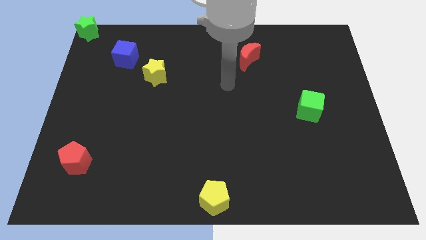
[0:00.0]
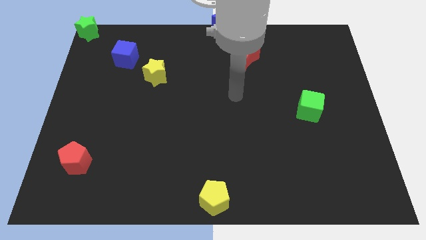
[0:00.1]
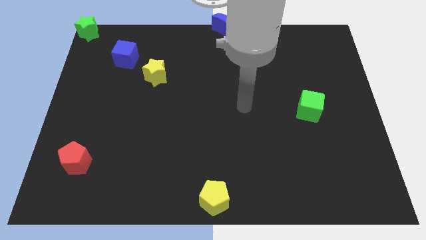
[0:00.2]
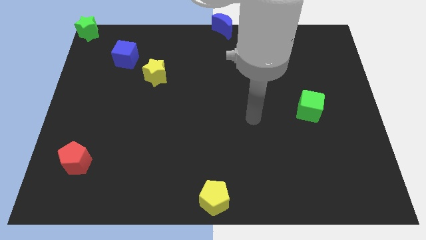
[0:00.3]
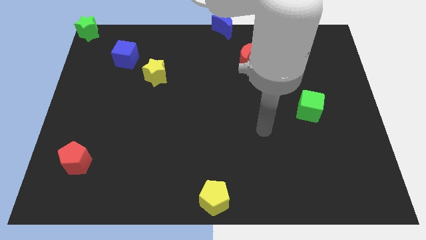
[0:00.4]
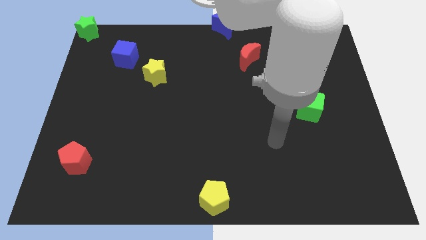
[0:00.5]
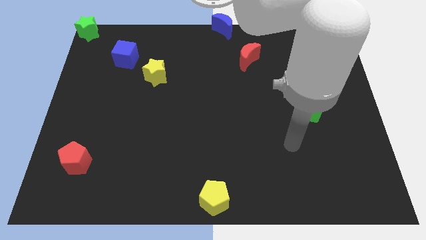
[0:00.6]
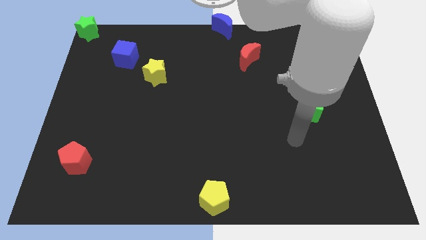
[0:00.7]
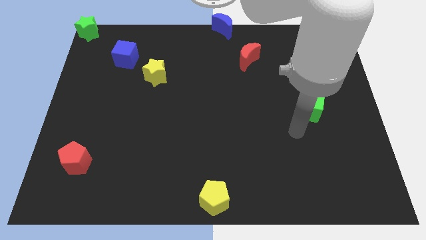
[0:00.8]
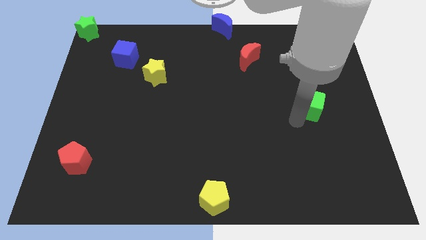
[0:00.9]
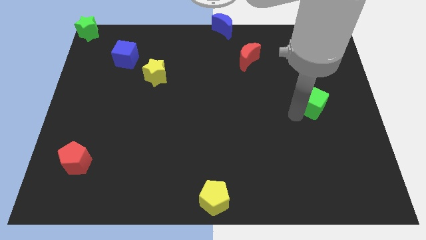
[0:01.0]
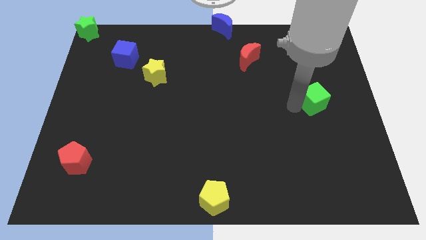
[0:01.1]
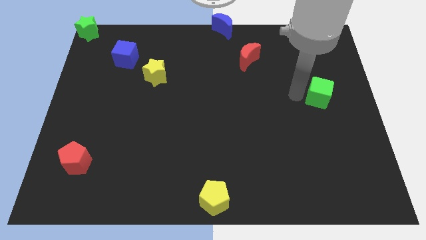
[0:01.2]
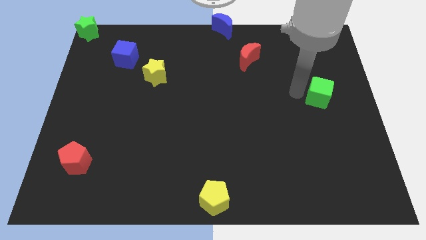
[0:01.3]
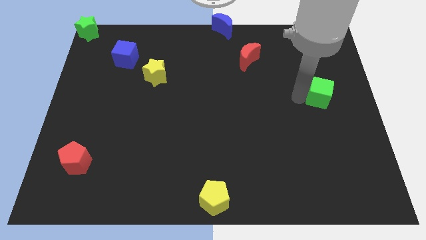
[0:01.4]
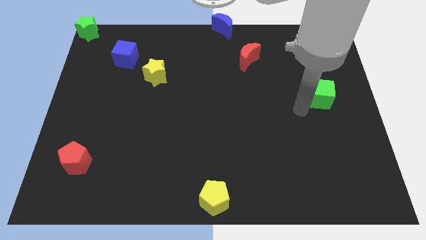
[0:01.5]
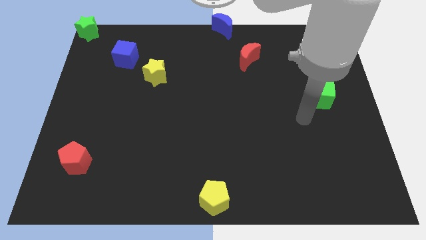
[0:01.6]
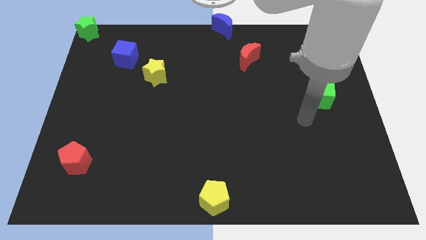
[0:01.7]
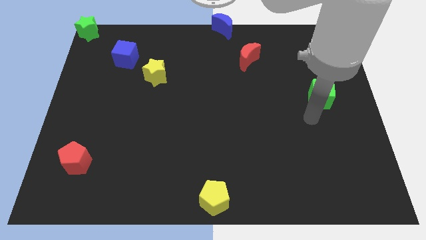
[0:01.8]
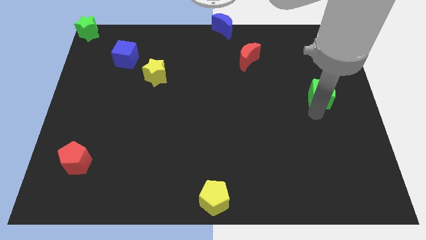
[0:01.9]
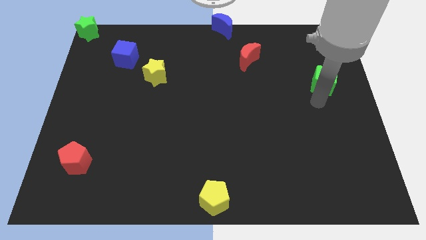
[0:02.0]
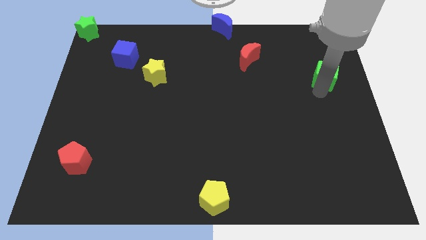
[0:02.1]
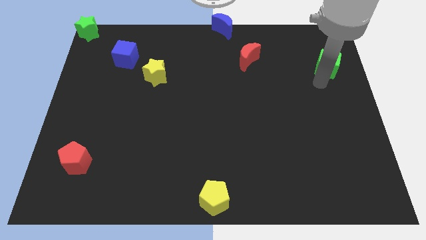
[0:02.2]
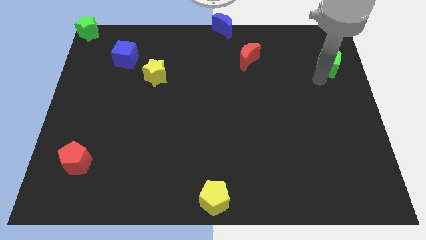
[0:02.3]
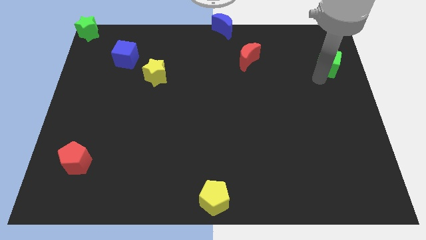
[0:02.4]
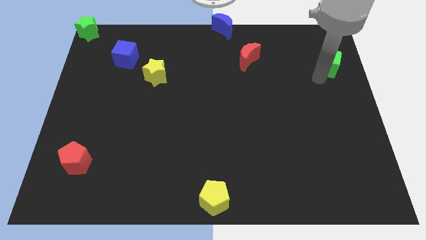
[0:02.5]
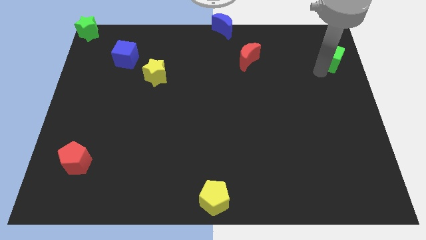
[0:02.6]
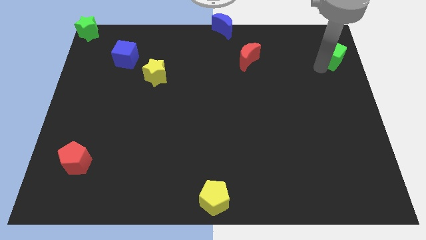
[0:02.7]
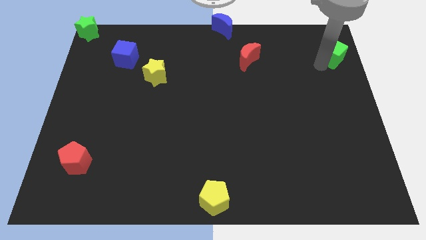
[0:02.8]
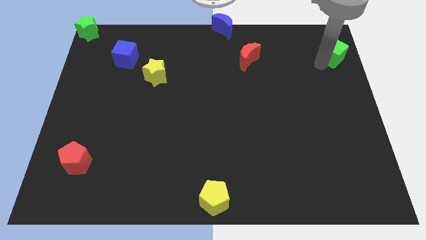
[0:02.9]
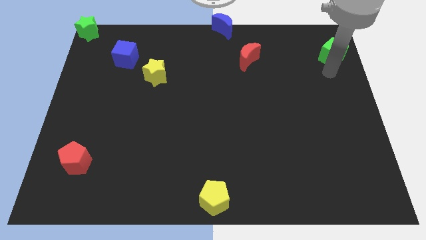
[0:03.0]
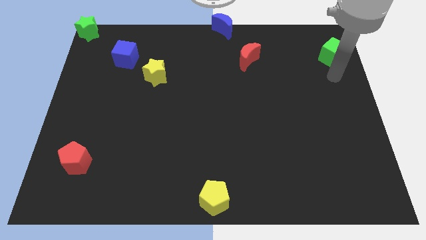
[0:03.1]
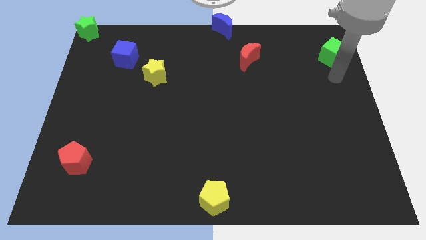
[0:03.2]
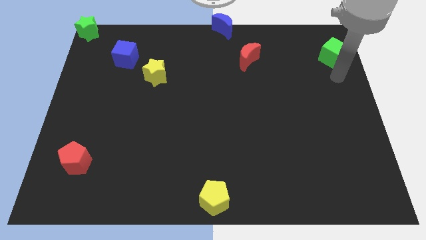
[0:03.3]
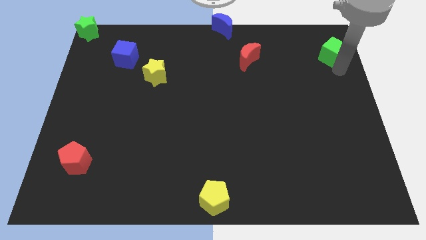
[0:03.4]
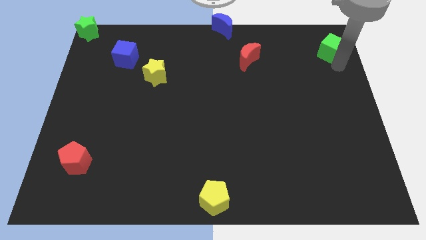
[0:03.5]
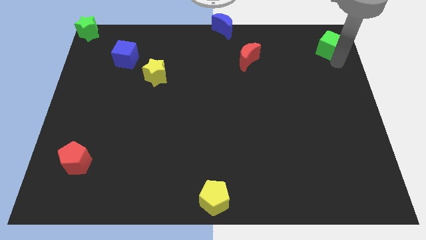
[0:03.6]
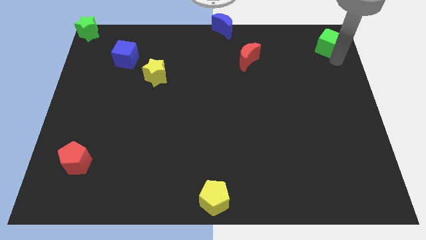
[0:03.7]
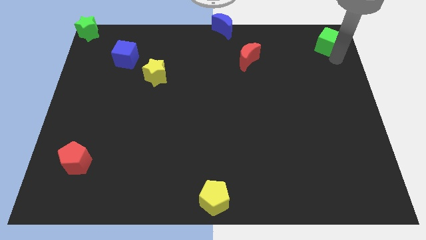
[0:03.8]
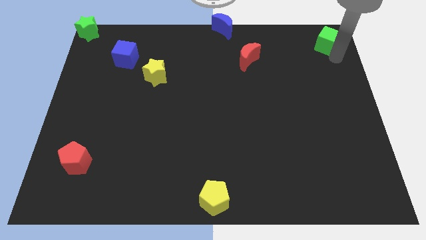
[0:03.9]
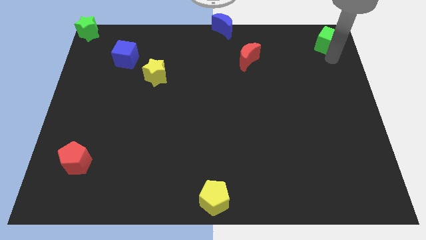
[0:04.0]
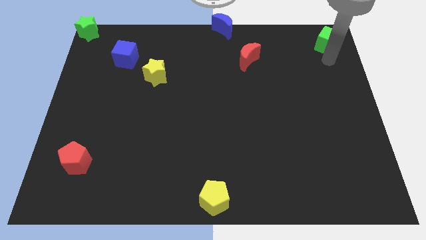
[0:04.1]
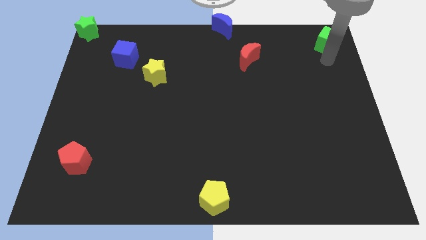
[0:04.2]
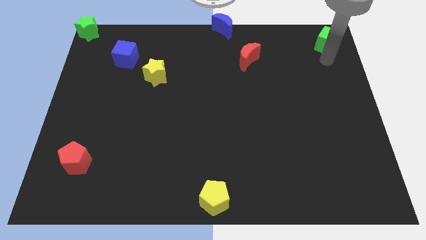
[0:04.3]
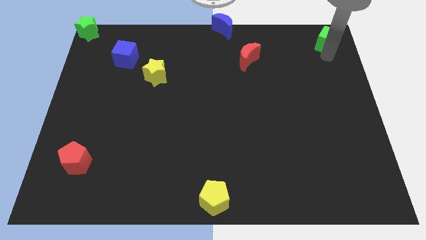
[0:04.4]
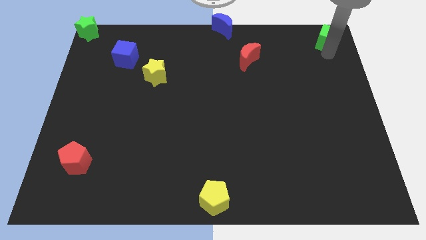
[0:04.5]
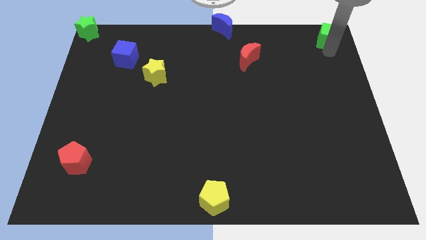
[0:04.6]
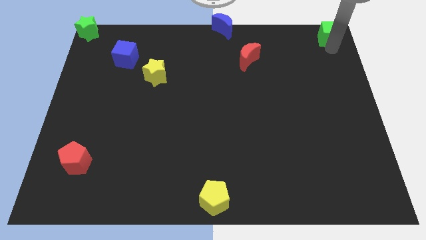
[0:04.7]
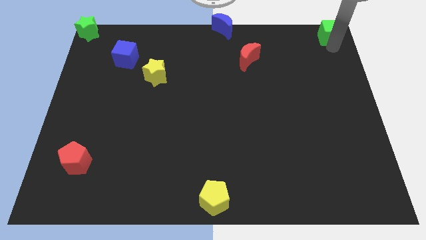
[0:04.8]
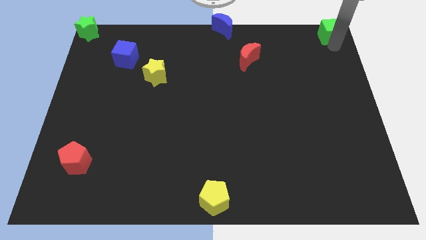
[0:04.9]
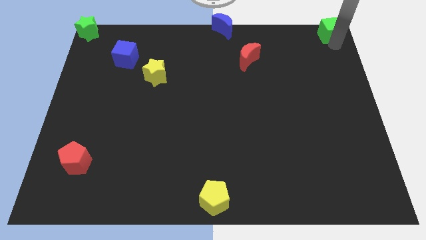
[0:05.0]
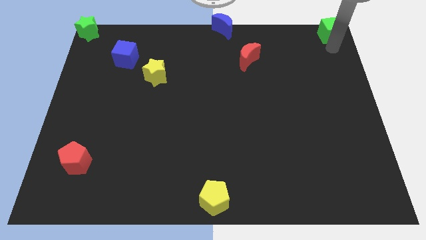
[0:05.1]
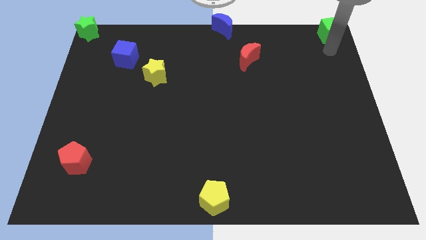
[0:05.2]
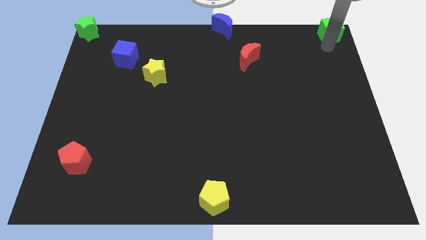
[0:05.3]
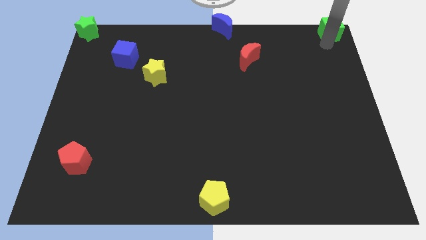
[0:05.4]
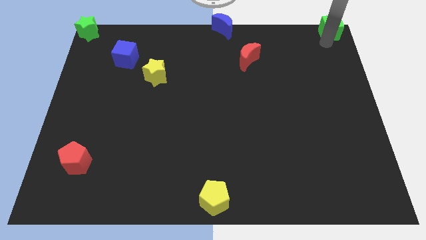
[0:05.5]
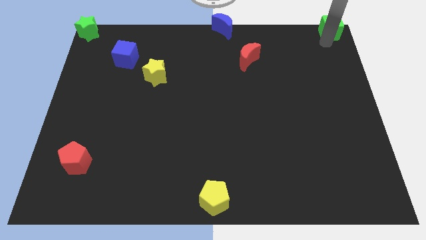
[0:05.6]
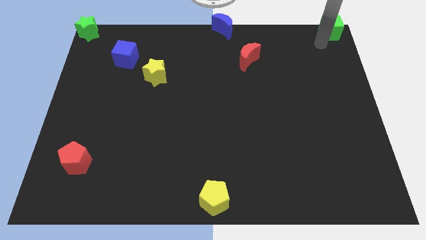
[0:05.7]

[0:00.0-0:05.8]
move the green cube to the top right corner of the board

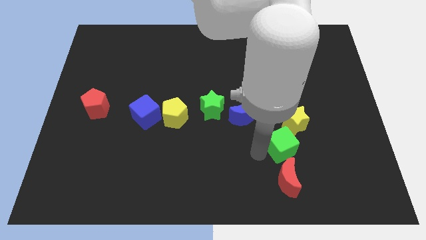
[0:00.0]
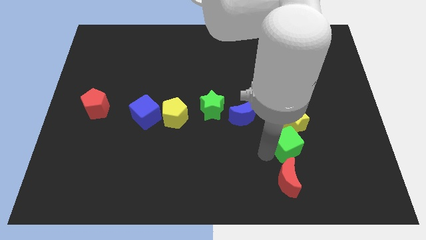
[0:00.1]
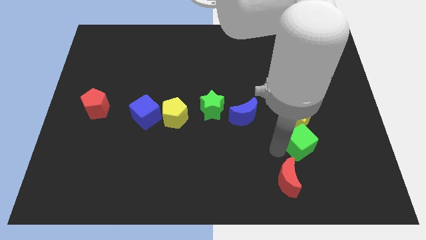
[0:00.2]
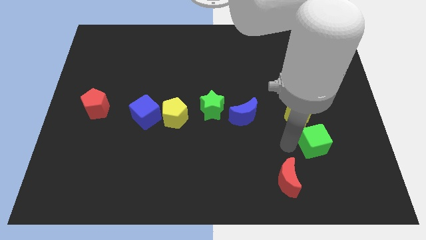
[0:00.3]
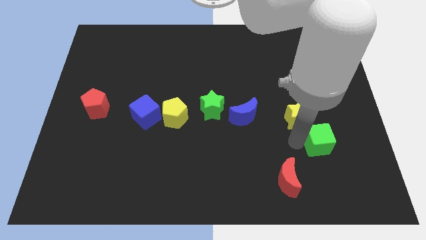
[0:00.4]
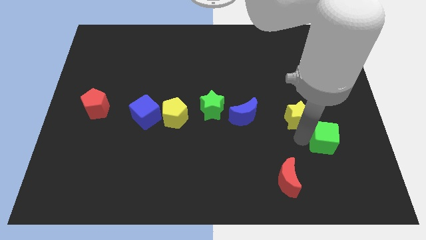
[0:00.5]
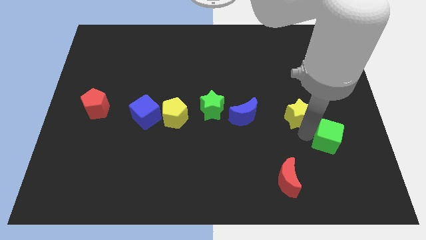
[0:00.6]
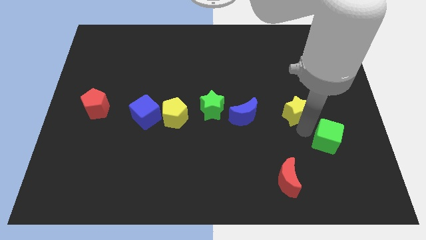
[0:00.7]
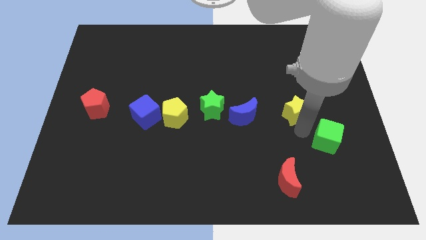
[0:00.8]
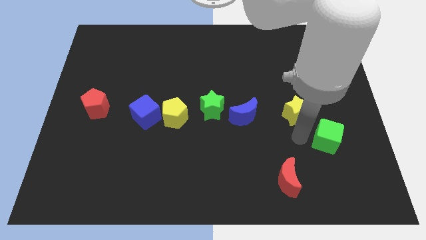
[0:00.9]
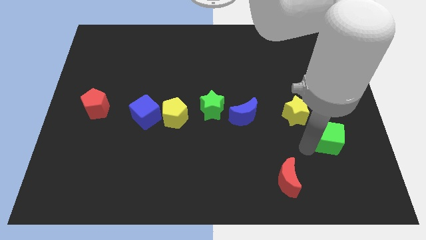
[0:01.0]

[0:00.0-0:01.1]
separate the green cube from the yellow star

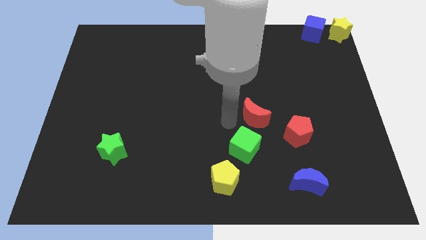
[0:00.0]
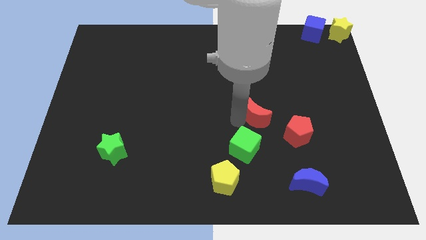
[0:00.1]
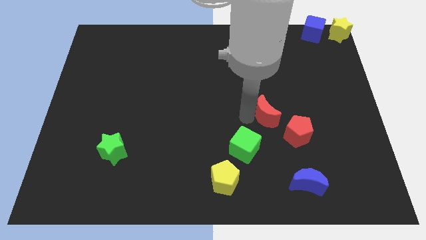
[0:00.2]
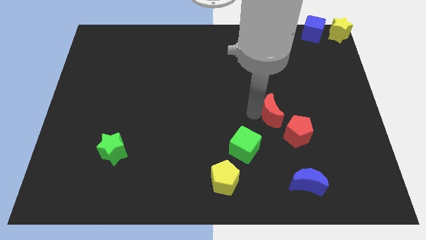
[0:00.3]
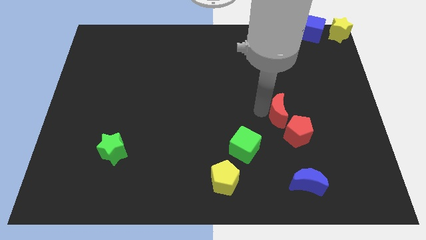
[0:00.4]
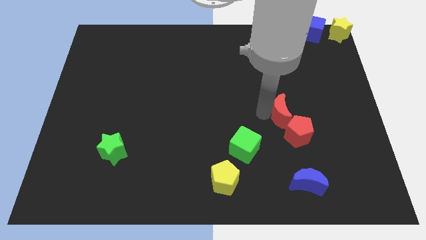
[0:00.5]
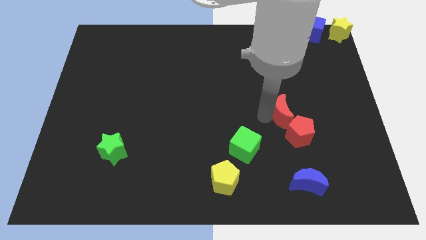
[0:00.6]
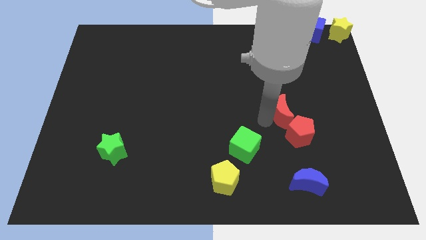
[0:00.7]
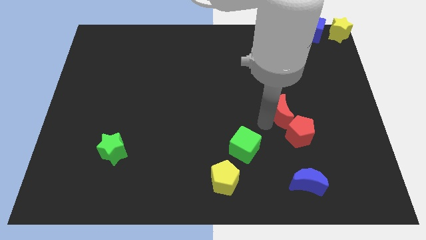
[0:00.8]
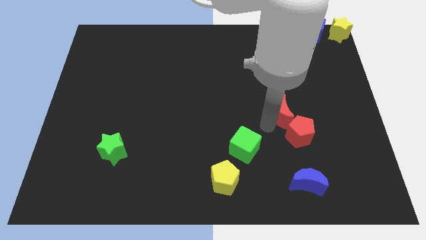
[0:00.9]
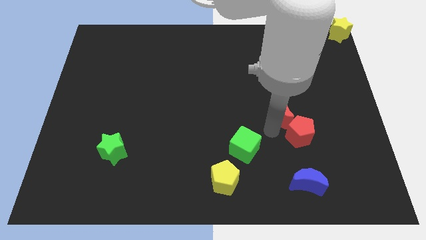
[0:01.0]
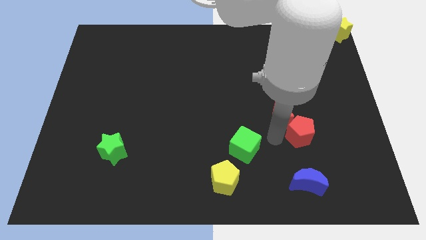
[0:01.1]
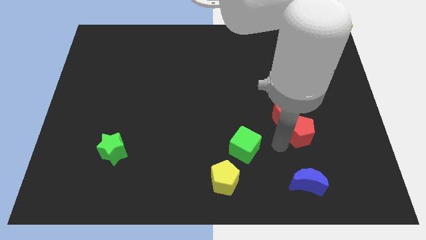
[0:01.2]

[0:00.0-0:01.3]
touch red pentagon with the help of red crescent

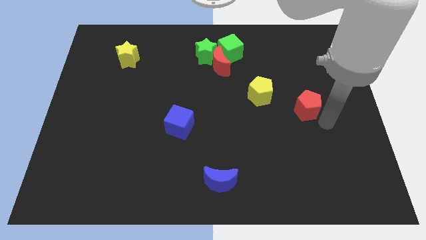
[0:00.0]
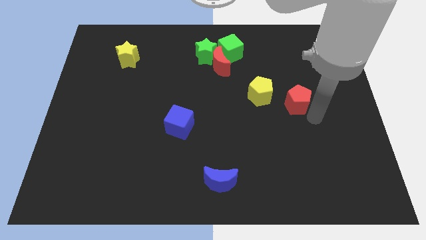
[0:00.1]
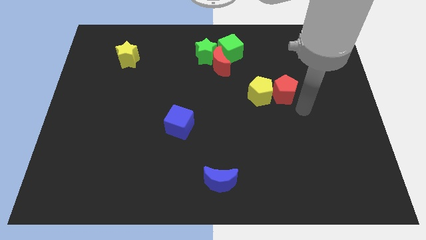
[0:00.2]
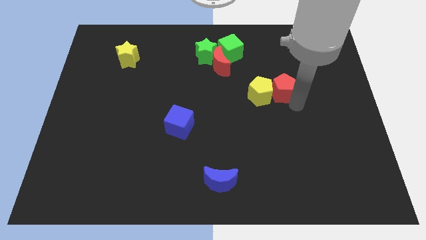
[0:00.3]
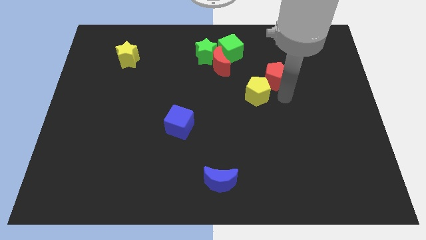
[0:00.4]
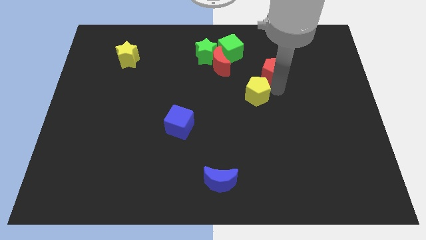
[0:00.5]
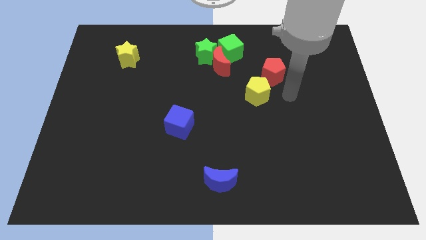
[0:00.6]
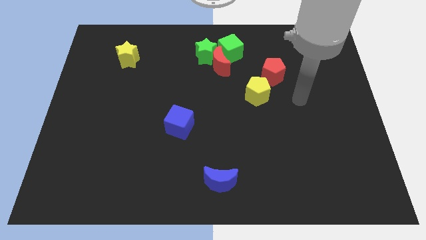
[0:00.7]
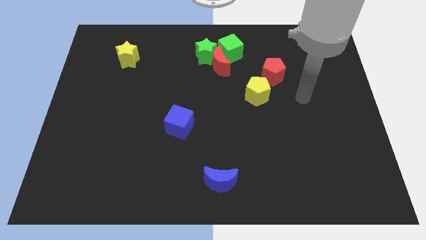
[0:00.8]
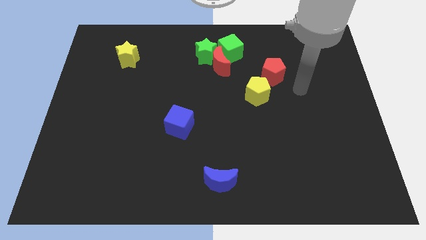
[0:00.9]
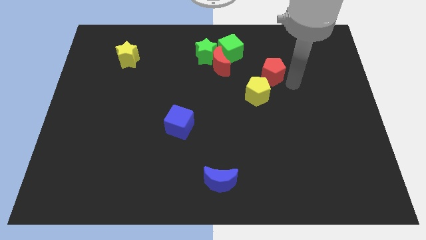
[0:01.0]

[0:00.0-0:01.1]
move red pentagon towards the green cube
